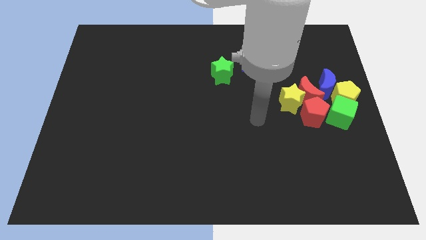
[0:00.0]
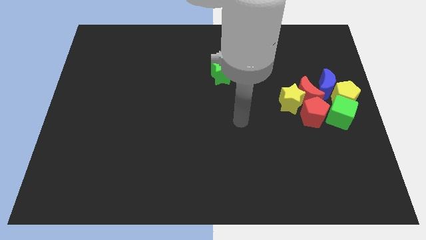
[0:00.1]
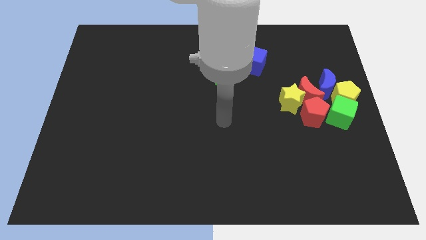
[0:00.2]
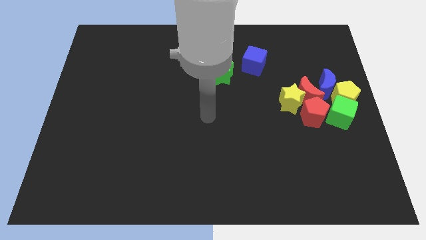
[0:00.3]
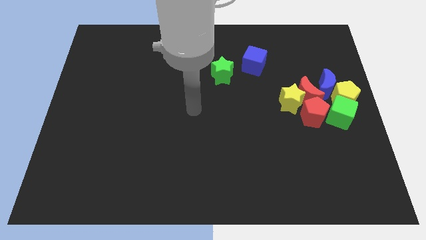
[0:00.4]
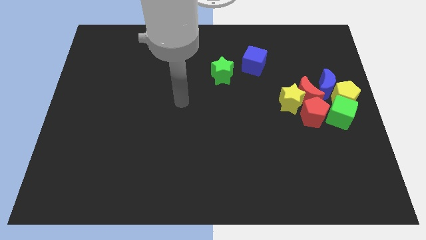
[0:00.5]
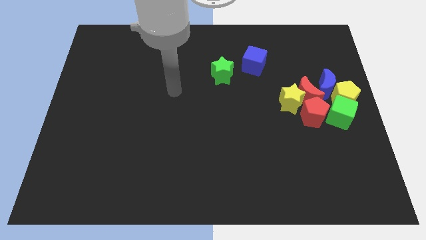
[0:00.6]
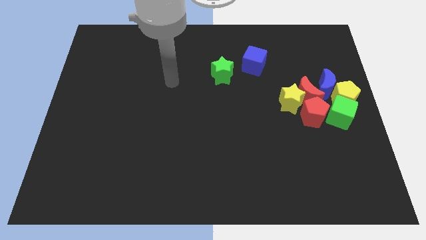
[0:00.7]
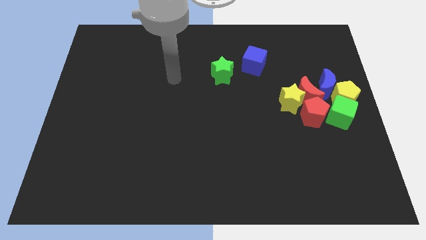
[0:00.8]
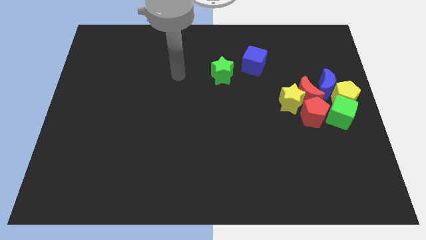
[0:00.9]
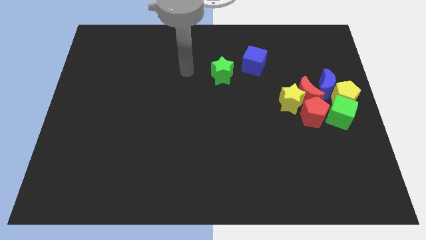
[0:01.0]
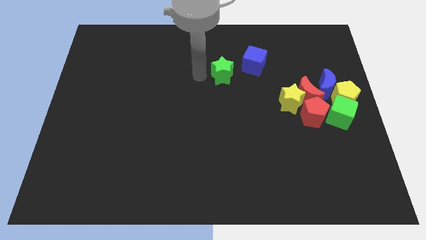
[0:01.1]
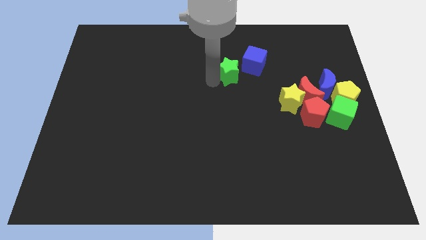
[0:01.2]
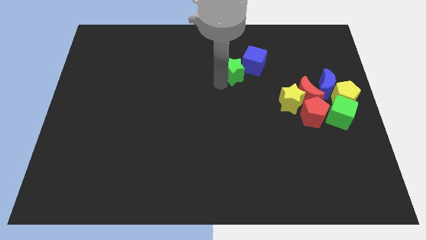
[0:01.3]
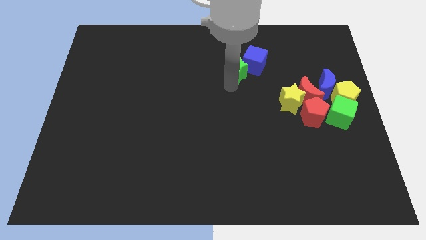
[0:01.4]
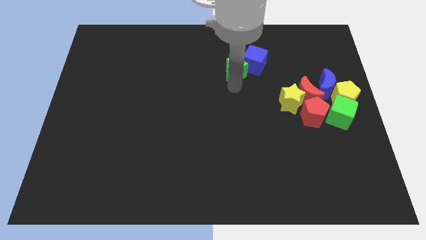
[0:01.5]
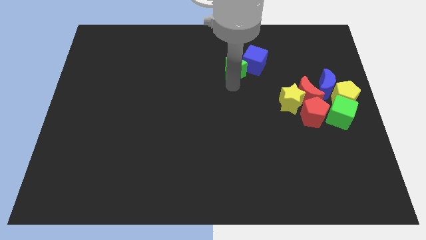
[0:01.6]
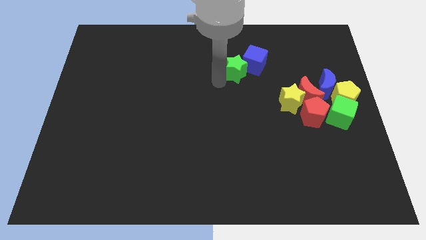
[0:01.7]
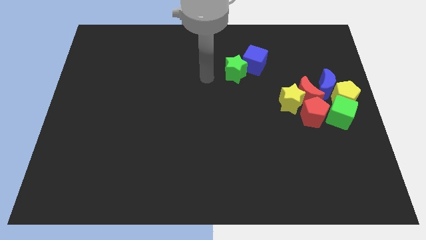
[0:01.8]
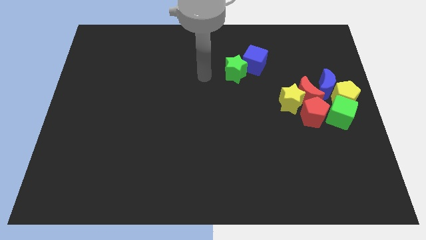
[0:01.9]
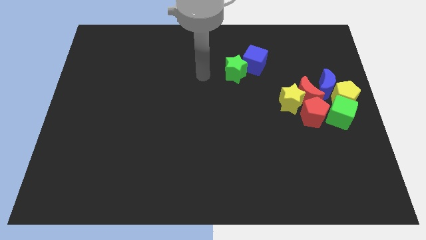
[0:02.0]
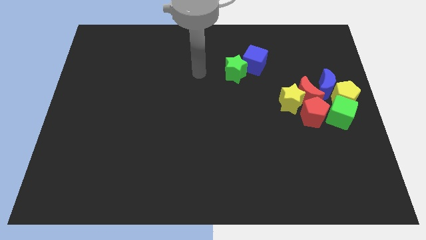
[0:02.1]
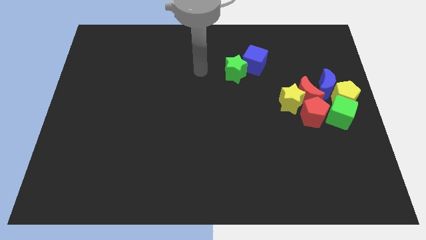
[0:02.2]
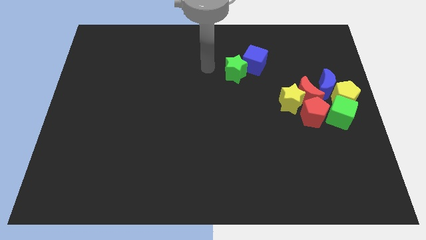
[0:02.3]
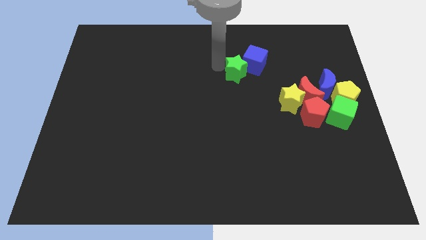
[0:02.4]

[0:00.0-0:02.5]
push the green star to the bottom left of the blue cube

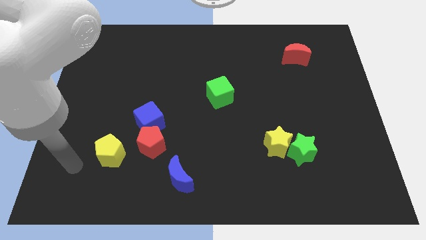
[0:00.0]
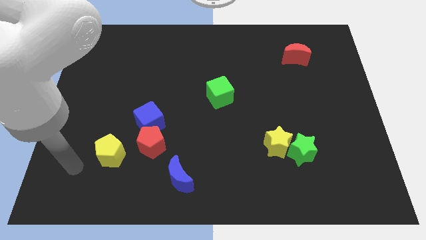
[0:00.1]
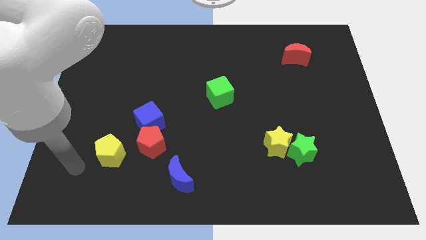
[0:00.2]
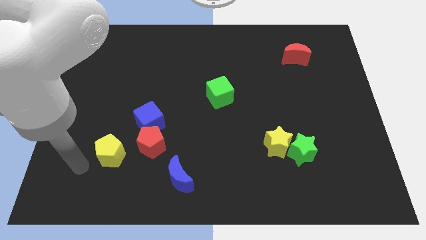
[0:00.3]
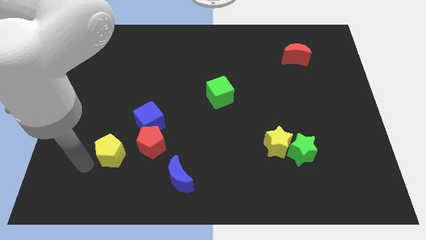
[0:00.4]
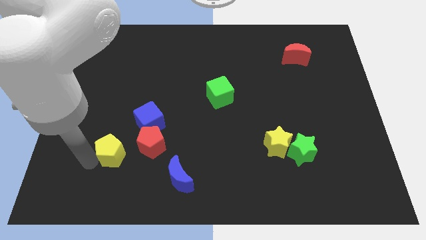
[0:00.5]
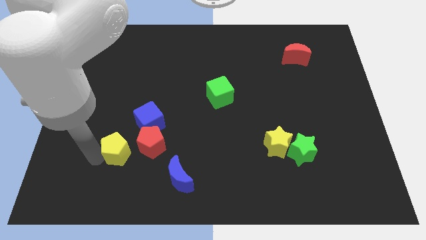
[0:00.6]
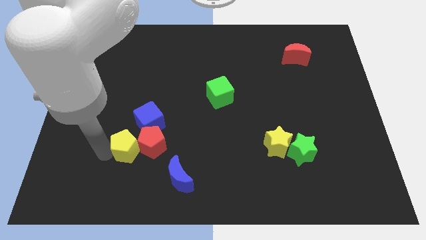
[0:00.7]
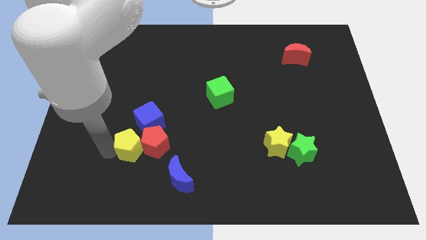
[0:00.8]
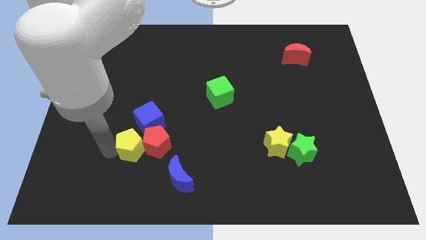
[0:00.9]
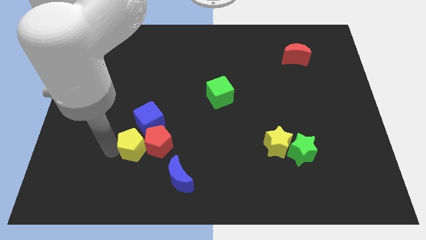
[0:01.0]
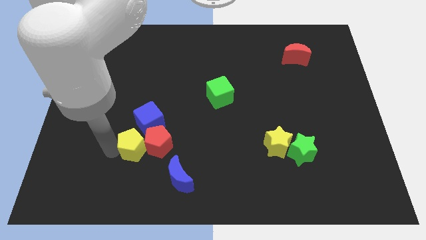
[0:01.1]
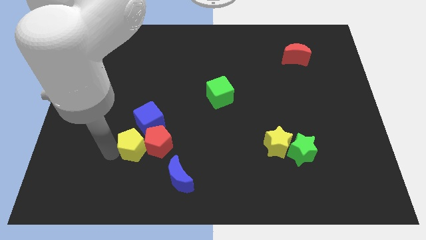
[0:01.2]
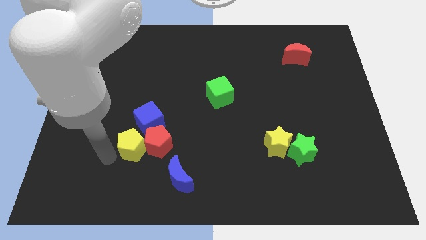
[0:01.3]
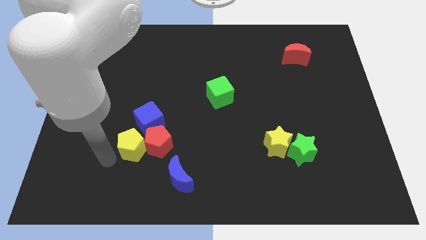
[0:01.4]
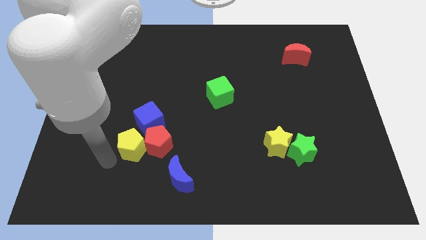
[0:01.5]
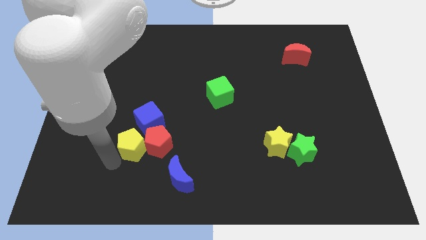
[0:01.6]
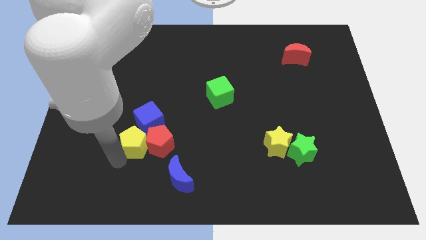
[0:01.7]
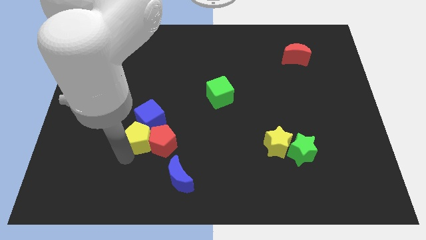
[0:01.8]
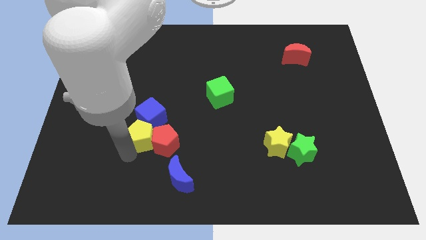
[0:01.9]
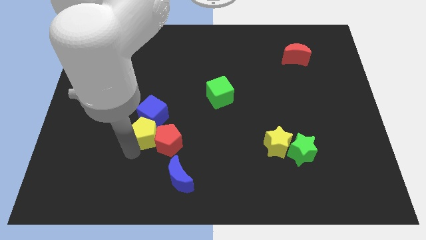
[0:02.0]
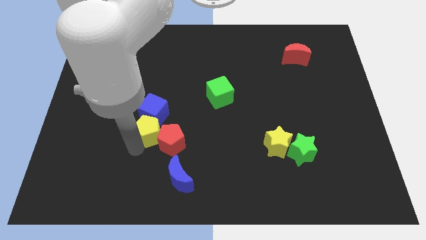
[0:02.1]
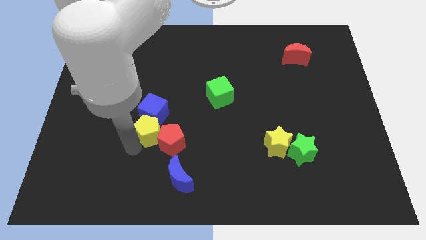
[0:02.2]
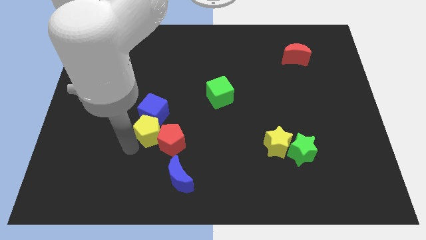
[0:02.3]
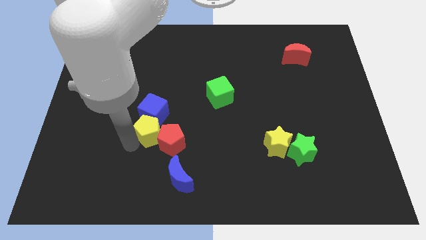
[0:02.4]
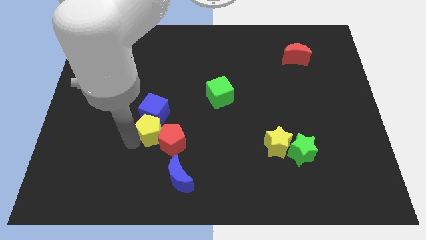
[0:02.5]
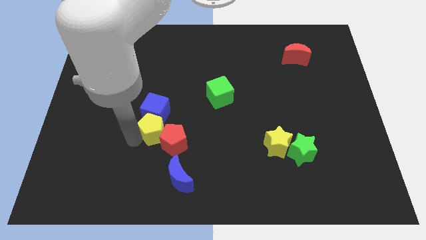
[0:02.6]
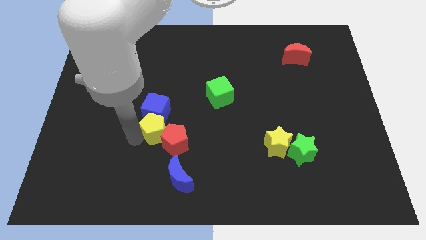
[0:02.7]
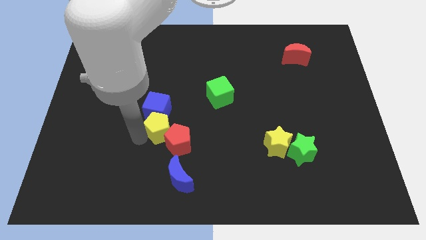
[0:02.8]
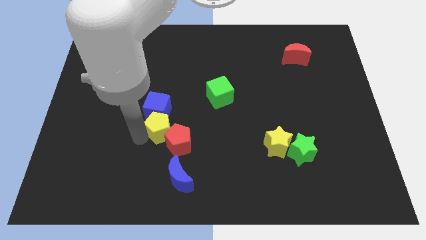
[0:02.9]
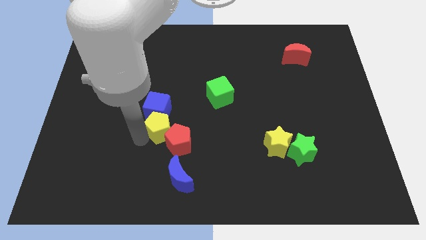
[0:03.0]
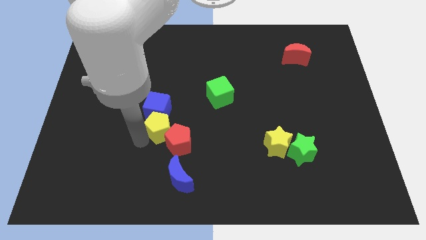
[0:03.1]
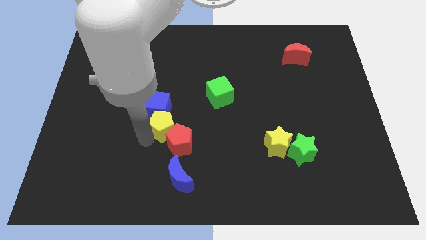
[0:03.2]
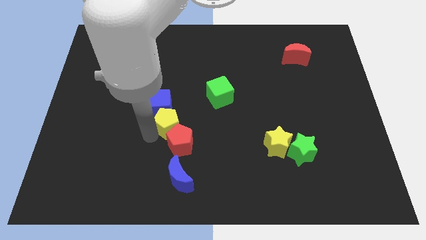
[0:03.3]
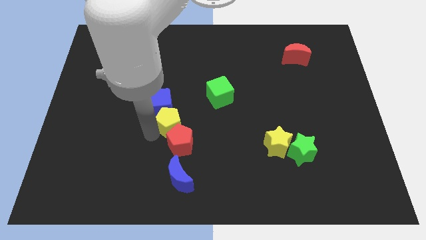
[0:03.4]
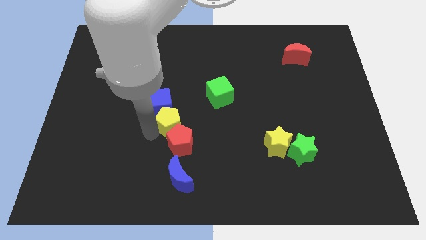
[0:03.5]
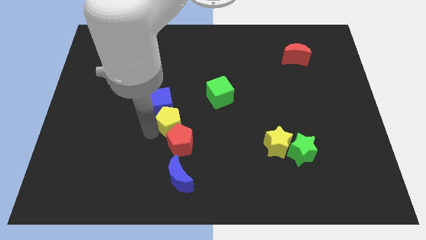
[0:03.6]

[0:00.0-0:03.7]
slide the yellow pentagon in between the blue cube and red pentagon

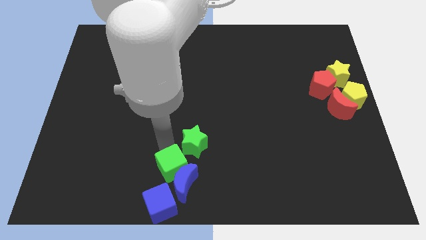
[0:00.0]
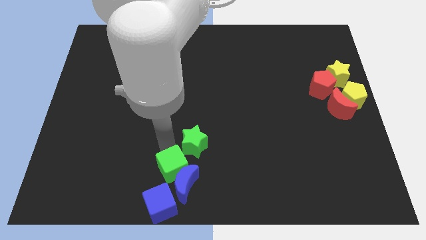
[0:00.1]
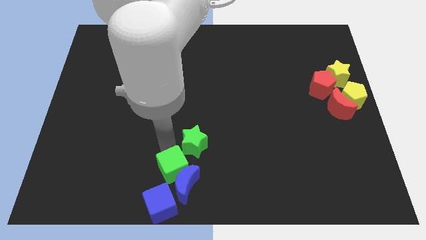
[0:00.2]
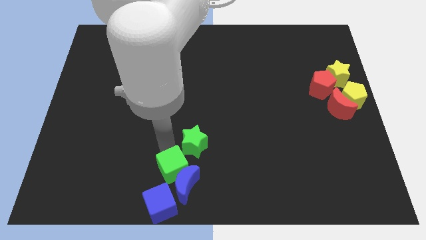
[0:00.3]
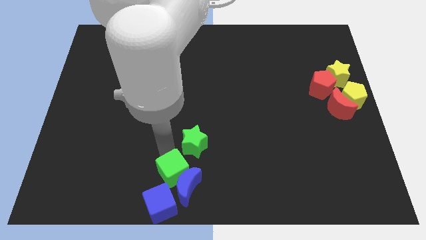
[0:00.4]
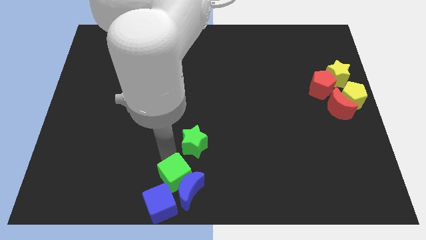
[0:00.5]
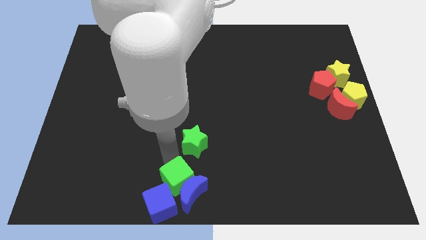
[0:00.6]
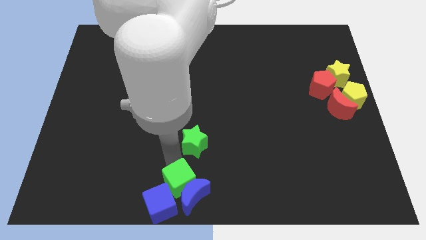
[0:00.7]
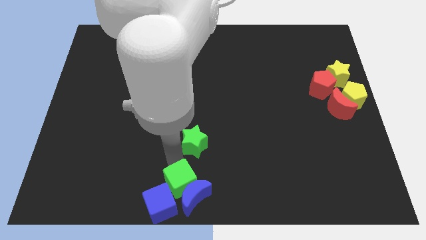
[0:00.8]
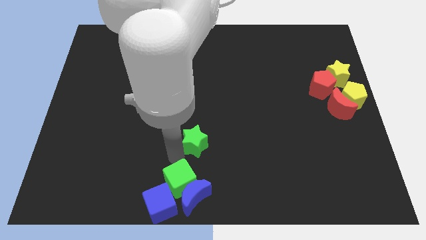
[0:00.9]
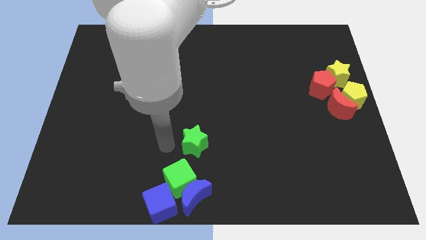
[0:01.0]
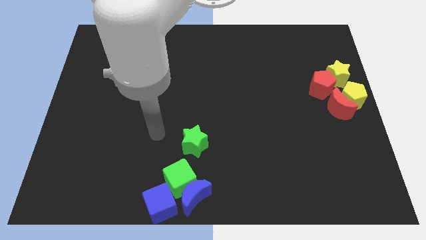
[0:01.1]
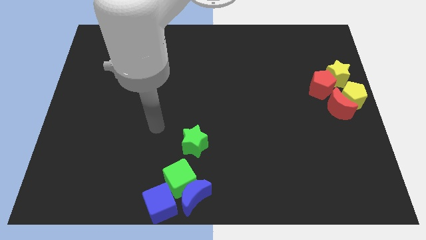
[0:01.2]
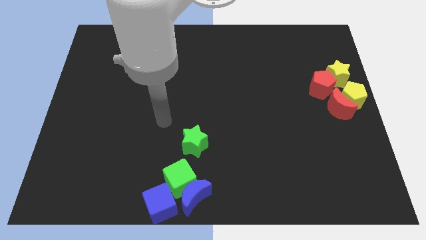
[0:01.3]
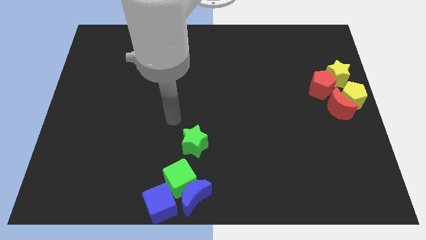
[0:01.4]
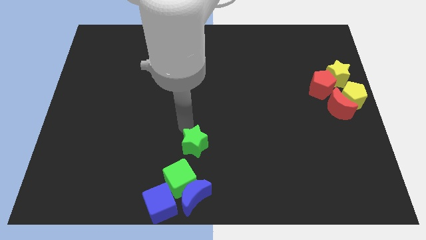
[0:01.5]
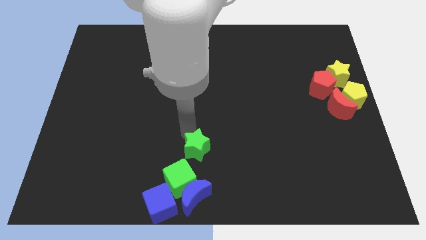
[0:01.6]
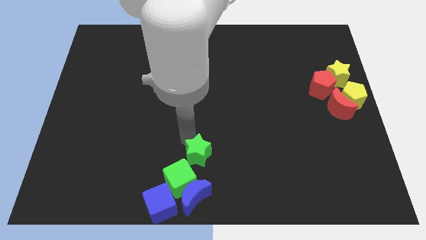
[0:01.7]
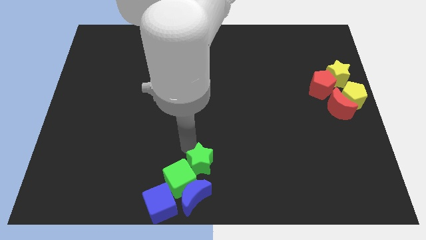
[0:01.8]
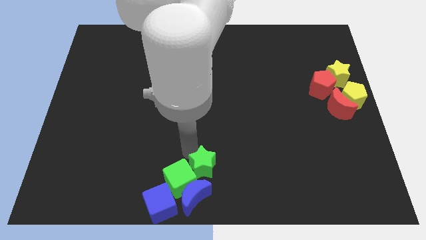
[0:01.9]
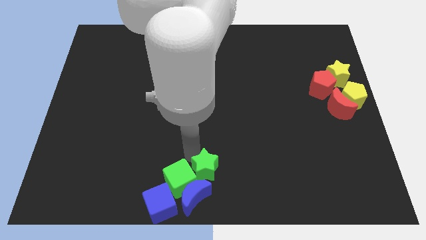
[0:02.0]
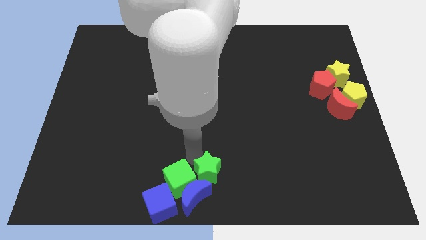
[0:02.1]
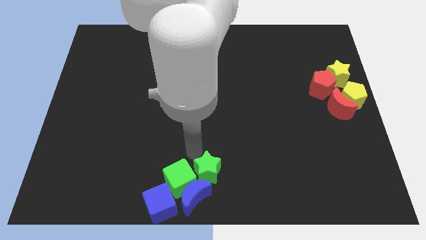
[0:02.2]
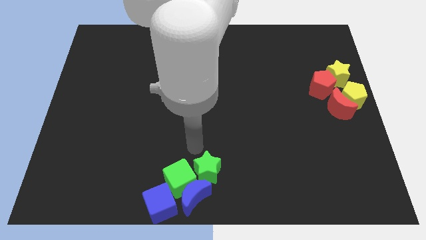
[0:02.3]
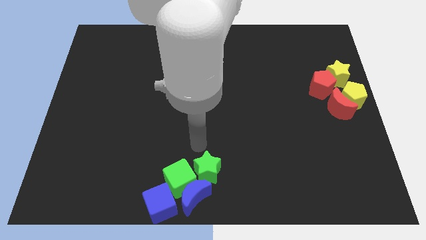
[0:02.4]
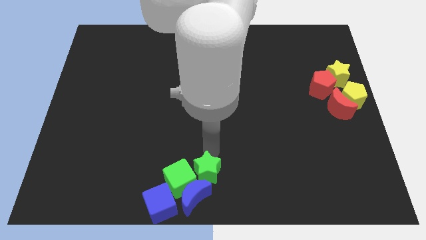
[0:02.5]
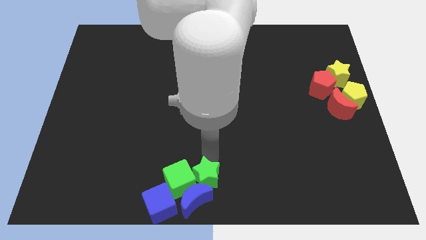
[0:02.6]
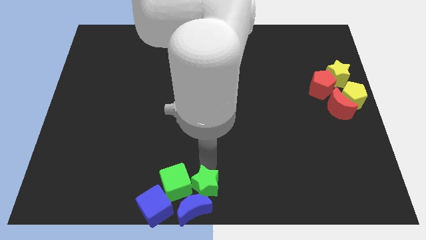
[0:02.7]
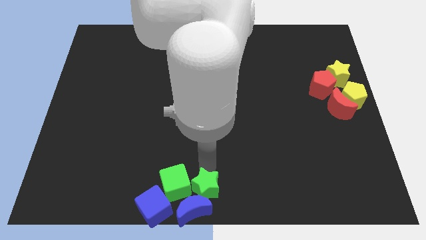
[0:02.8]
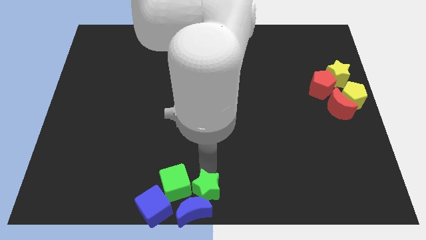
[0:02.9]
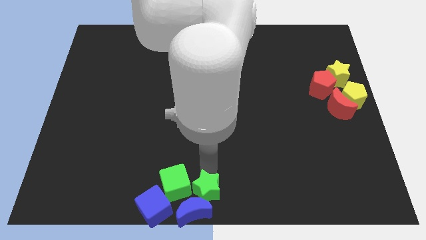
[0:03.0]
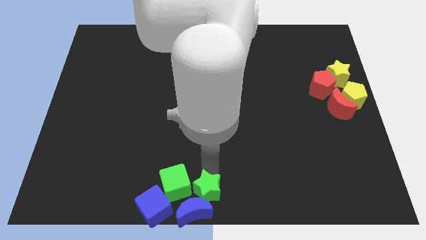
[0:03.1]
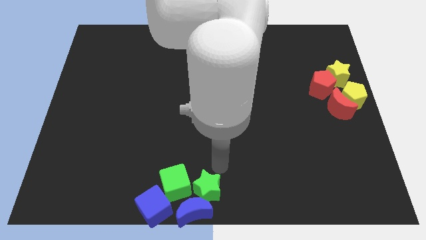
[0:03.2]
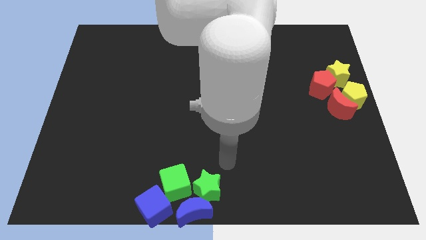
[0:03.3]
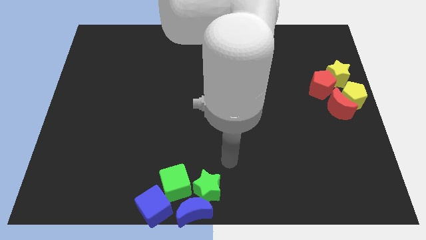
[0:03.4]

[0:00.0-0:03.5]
move the green star into the blue moon
